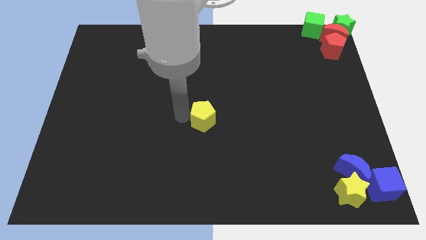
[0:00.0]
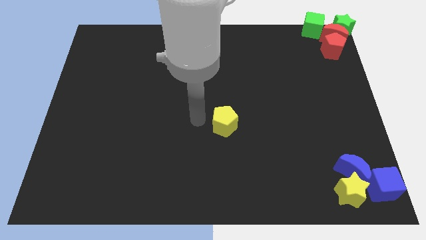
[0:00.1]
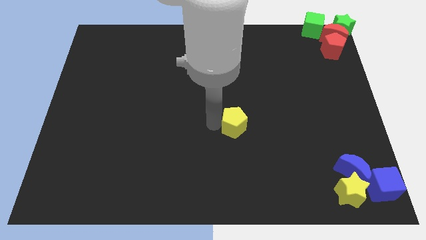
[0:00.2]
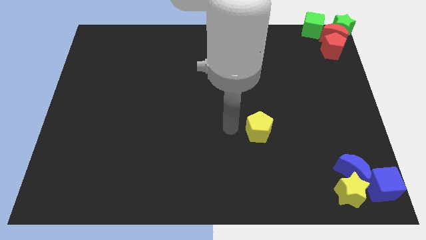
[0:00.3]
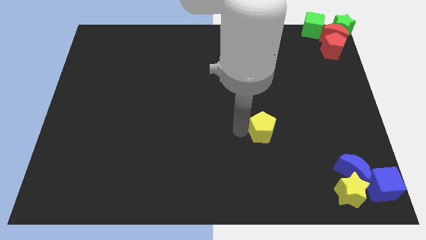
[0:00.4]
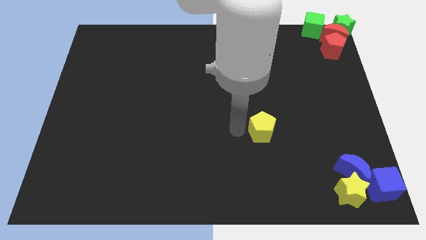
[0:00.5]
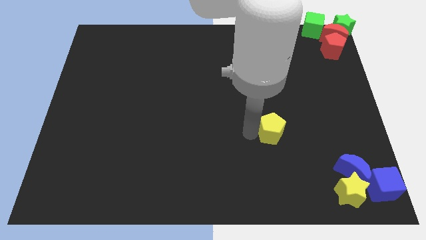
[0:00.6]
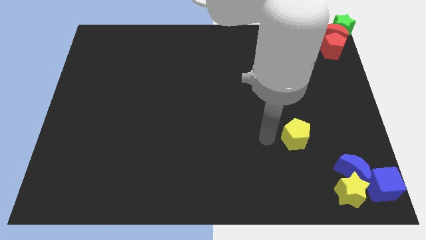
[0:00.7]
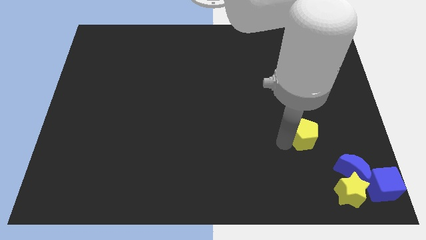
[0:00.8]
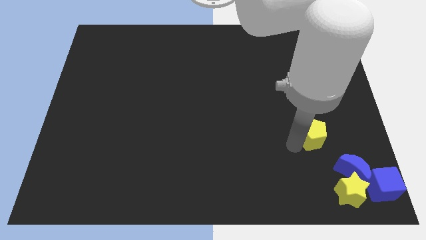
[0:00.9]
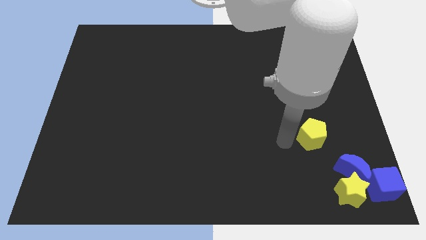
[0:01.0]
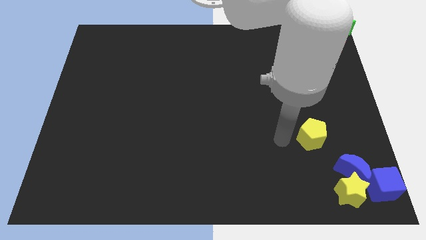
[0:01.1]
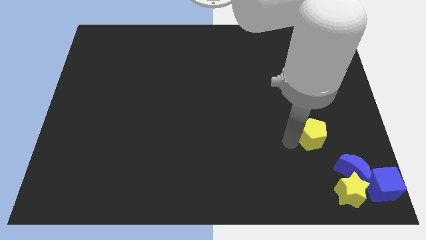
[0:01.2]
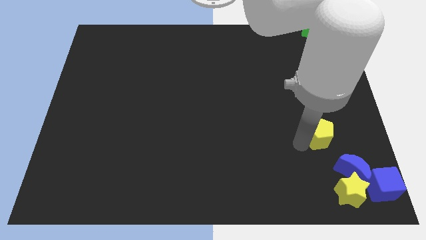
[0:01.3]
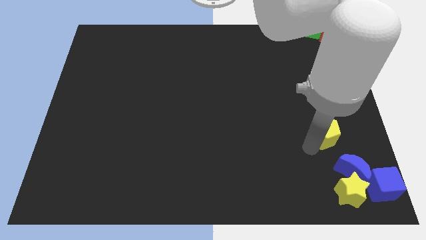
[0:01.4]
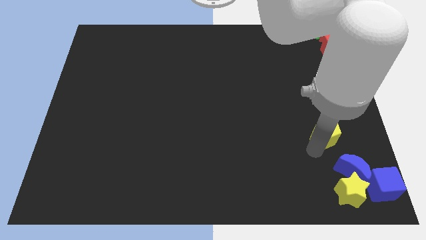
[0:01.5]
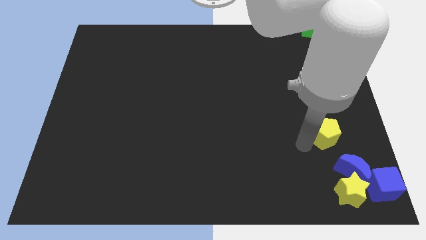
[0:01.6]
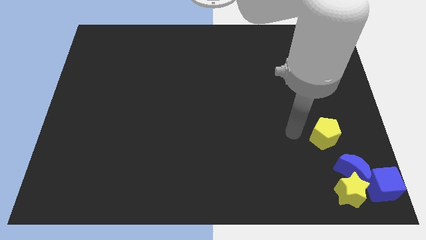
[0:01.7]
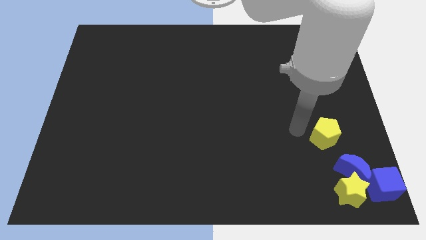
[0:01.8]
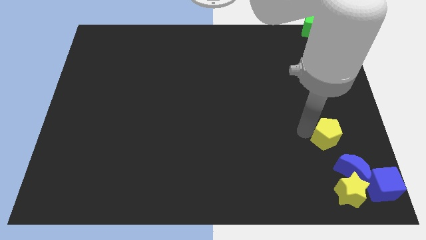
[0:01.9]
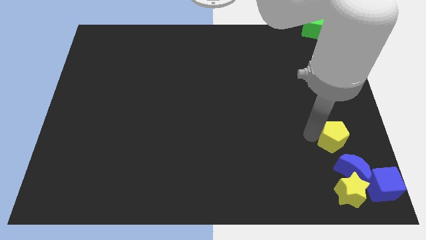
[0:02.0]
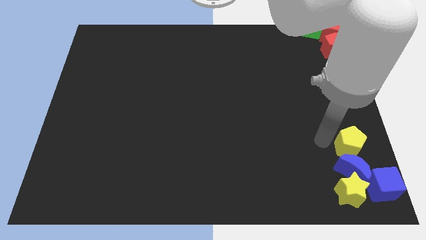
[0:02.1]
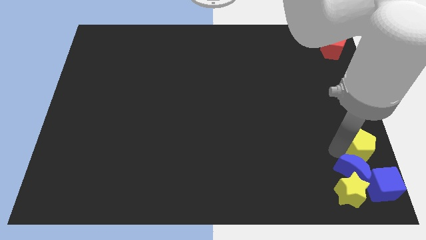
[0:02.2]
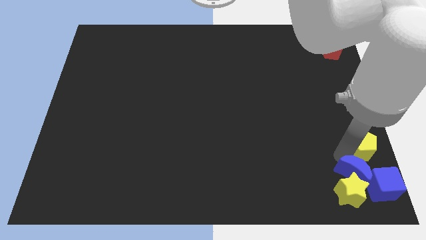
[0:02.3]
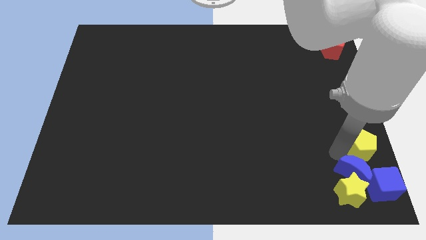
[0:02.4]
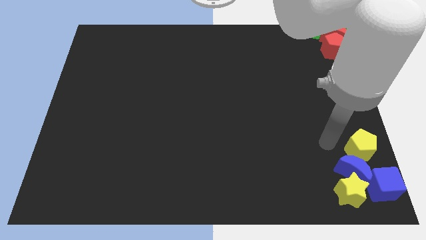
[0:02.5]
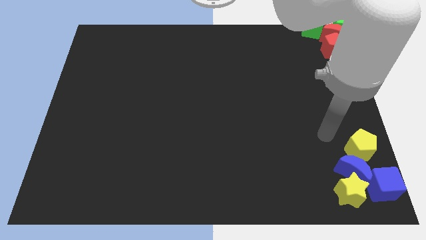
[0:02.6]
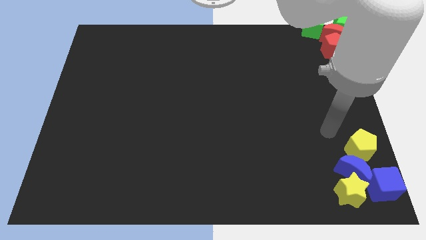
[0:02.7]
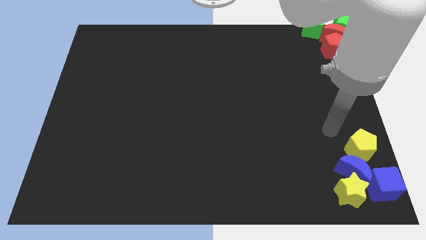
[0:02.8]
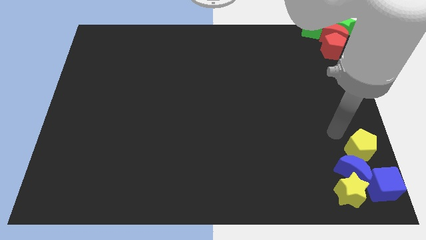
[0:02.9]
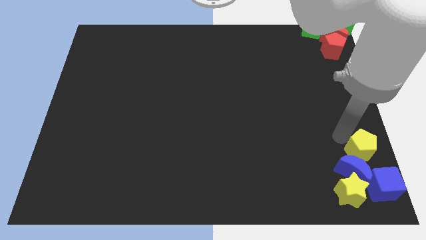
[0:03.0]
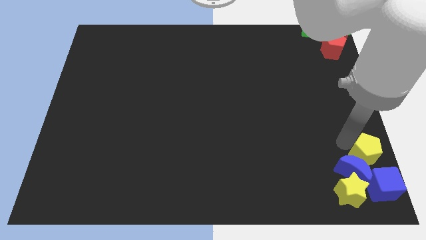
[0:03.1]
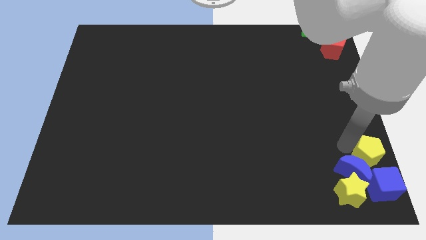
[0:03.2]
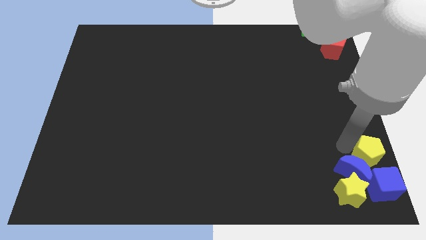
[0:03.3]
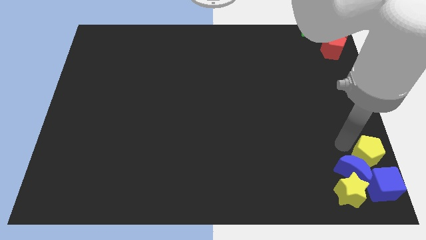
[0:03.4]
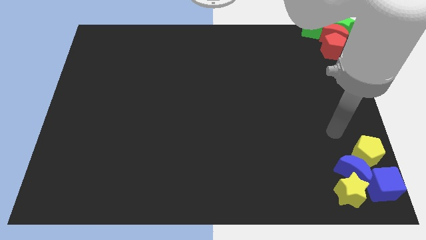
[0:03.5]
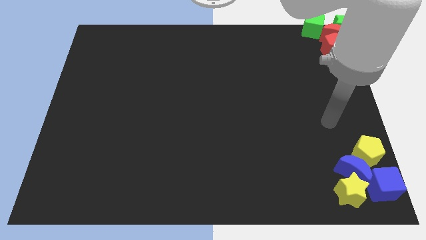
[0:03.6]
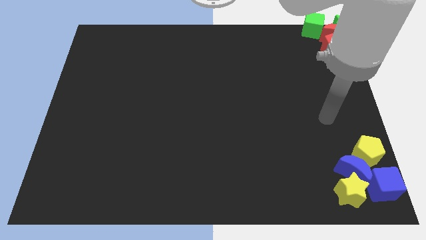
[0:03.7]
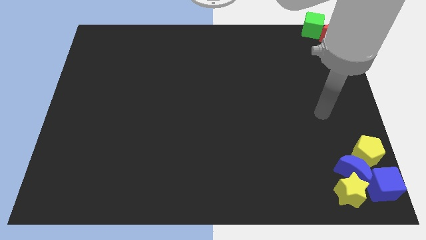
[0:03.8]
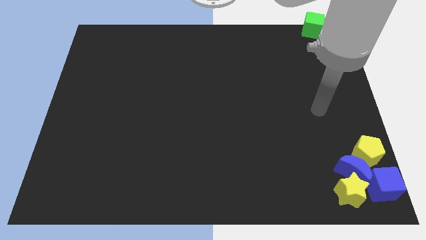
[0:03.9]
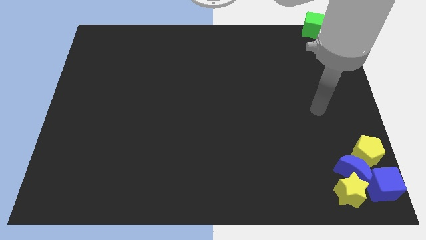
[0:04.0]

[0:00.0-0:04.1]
slide the yellow pentagon to the top left of blue cube

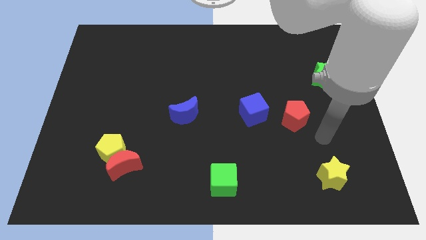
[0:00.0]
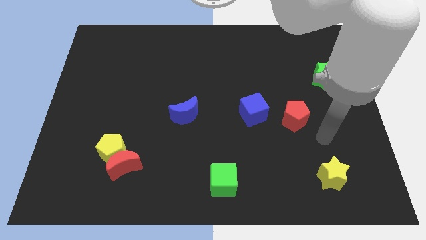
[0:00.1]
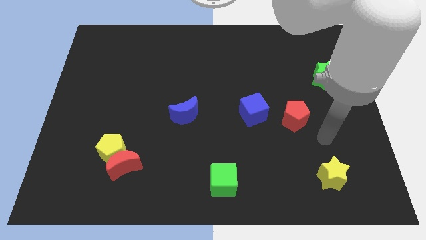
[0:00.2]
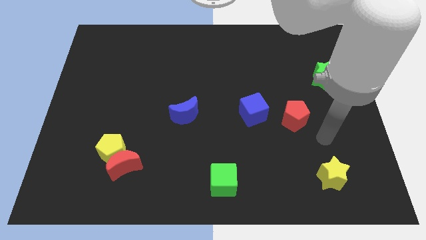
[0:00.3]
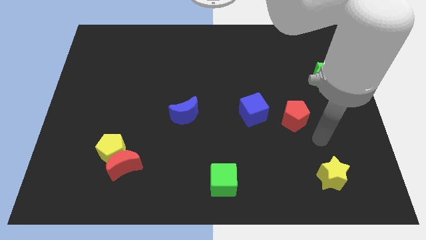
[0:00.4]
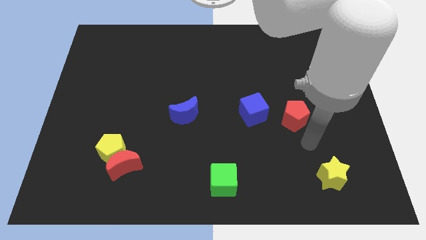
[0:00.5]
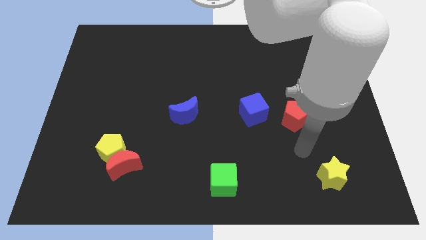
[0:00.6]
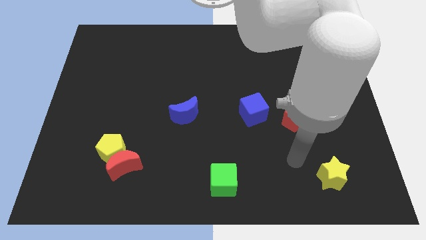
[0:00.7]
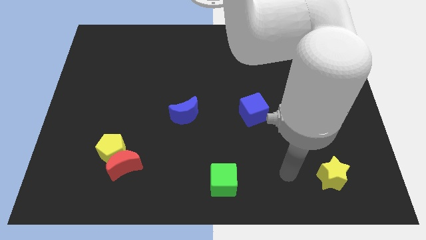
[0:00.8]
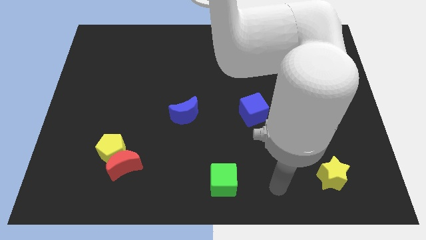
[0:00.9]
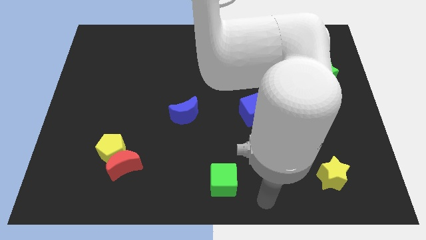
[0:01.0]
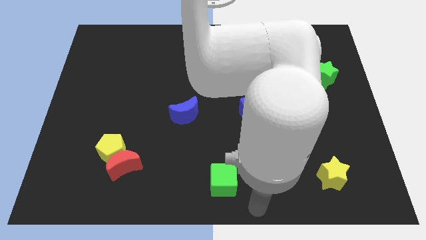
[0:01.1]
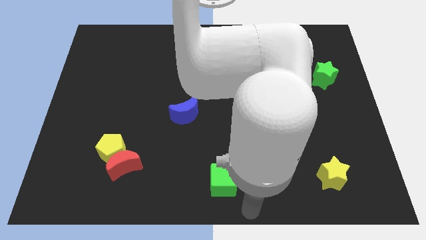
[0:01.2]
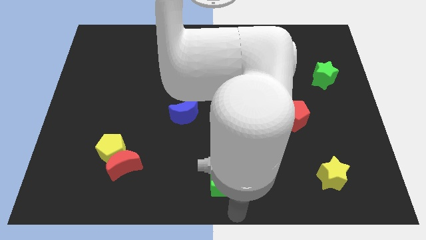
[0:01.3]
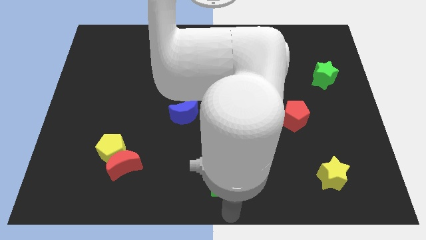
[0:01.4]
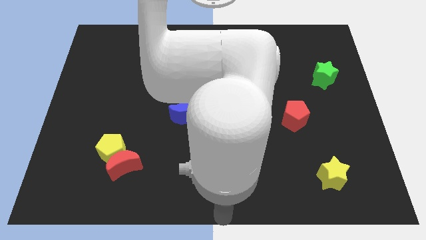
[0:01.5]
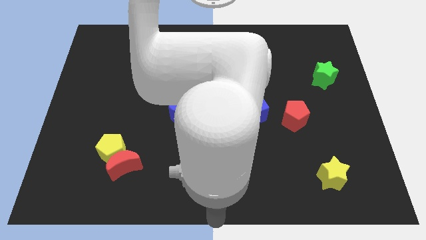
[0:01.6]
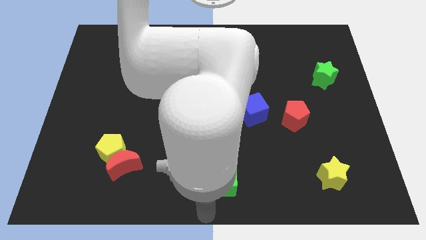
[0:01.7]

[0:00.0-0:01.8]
move your arm below the green cube

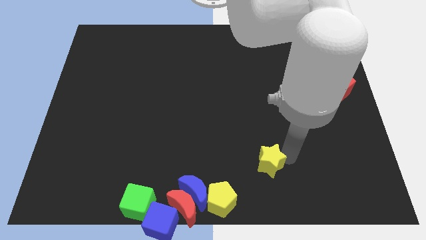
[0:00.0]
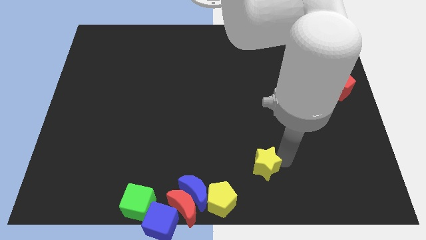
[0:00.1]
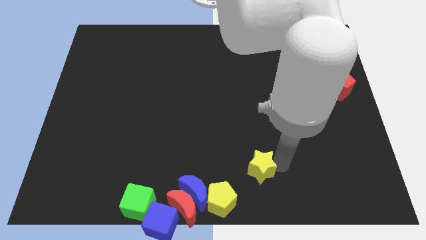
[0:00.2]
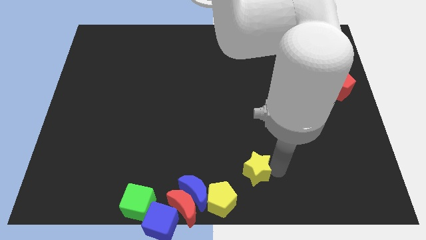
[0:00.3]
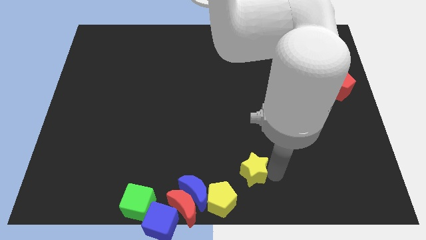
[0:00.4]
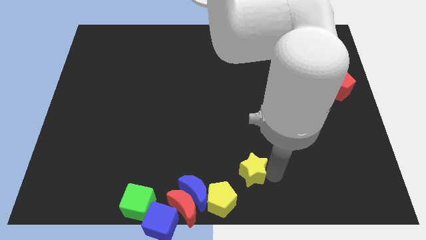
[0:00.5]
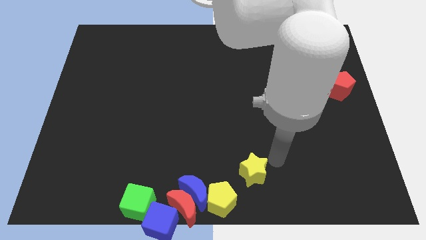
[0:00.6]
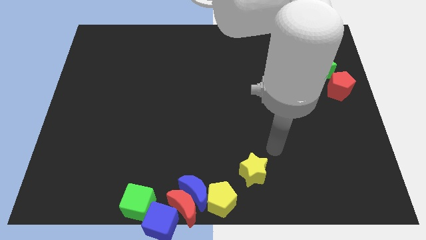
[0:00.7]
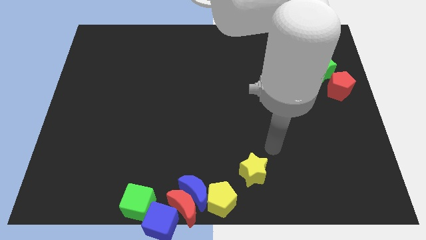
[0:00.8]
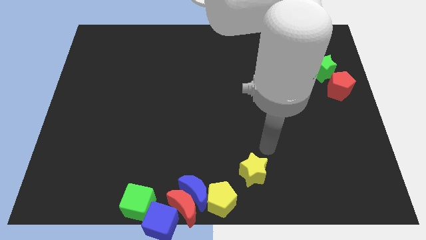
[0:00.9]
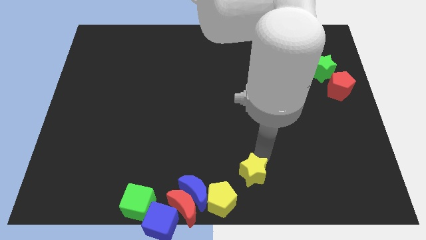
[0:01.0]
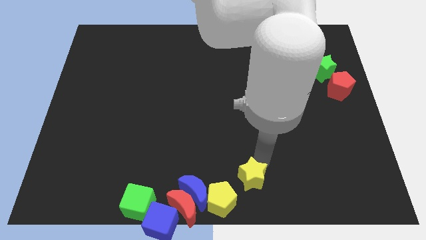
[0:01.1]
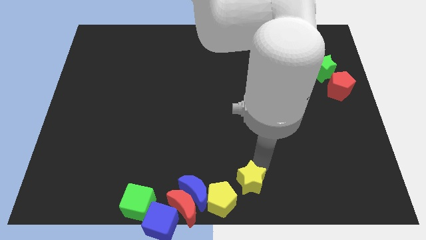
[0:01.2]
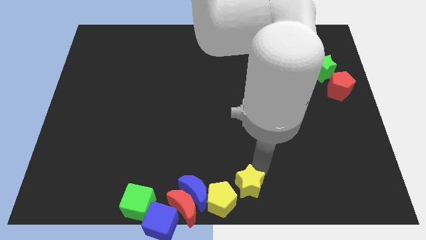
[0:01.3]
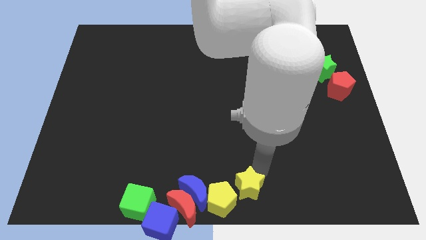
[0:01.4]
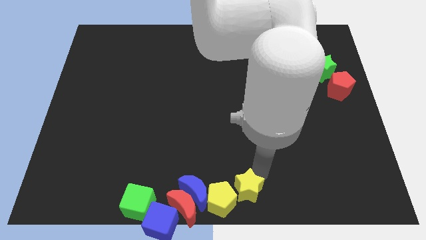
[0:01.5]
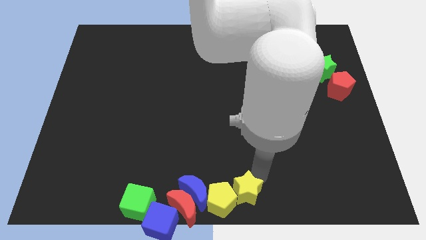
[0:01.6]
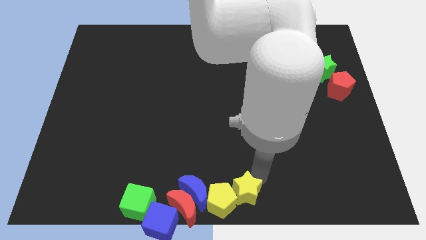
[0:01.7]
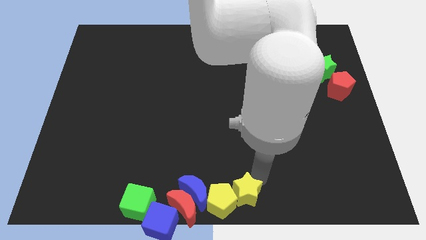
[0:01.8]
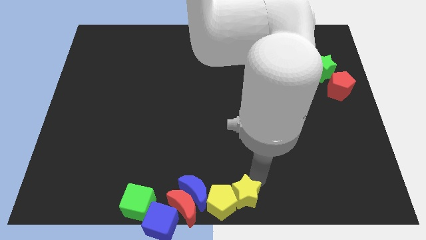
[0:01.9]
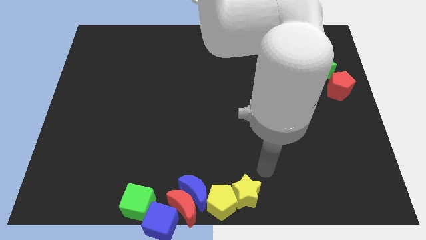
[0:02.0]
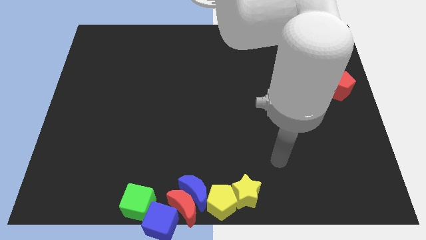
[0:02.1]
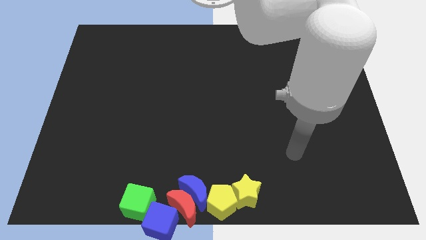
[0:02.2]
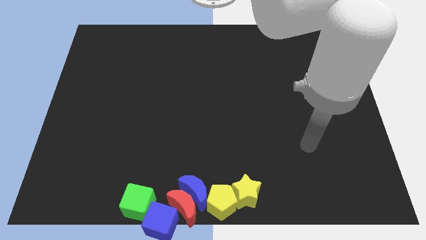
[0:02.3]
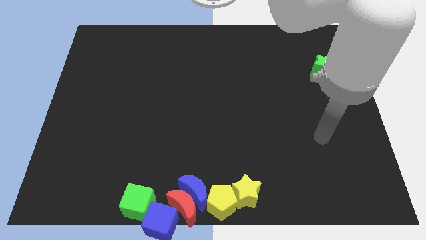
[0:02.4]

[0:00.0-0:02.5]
move the yellow star into the yellow pentagon

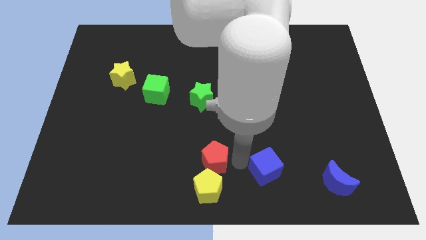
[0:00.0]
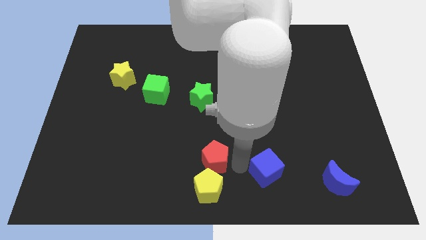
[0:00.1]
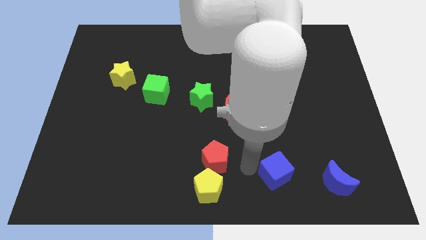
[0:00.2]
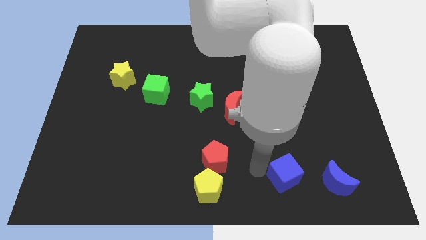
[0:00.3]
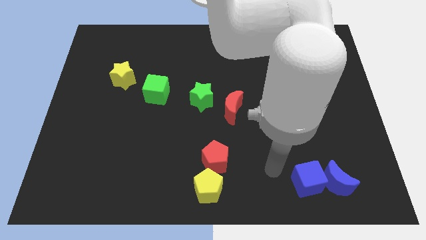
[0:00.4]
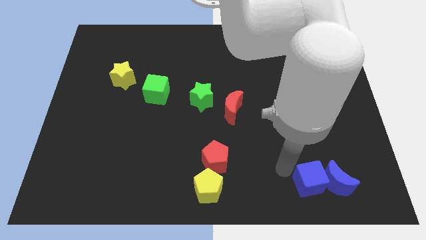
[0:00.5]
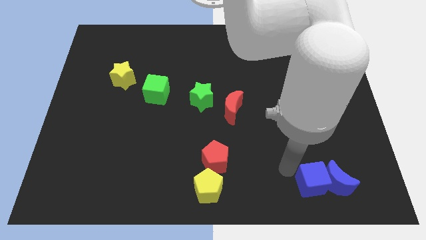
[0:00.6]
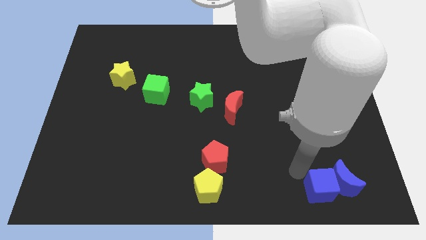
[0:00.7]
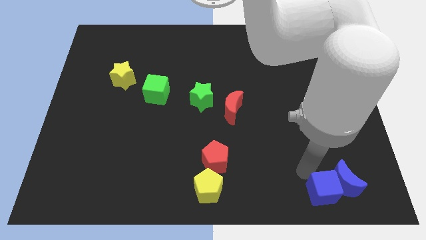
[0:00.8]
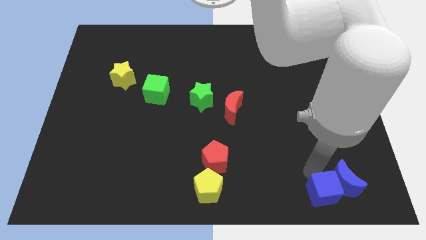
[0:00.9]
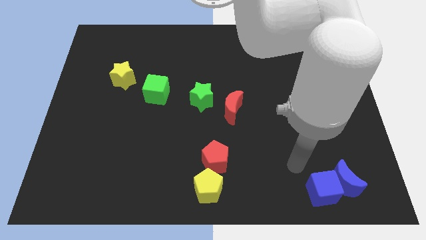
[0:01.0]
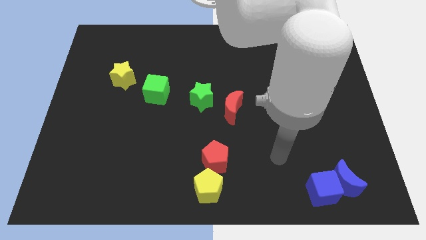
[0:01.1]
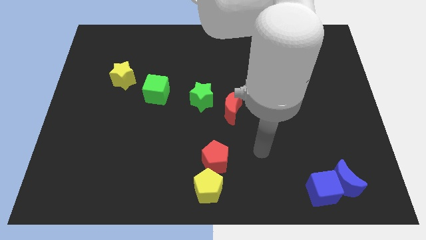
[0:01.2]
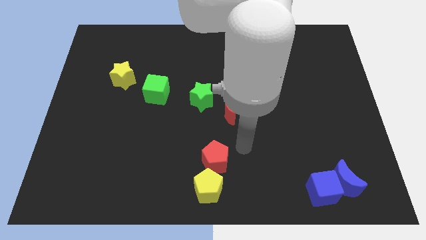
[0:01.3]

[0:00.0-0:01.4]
move the blue cube into the blue moon
